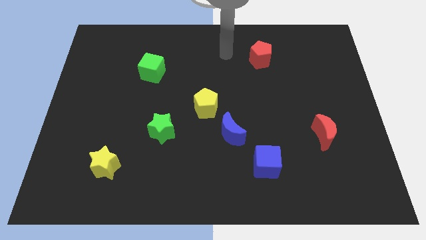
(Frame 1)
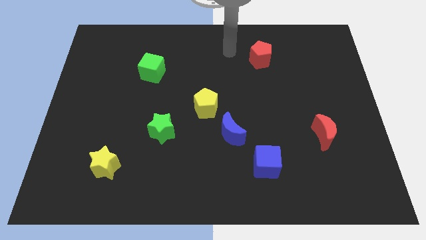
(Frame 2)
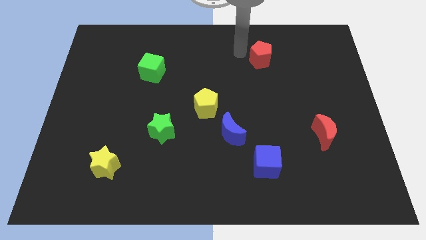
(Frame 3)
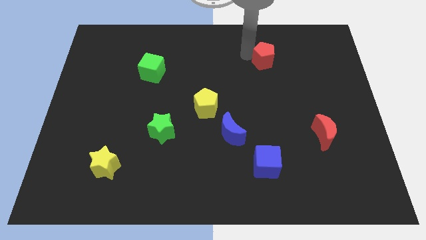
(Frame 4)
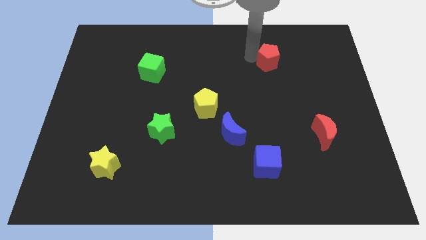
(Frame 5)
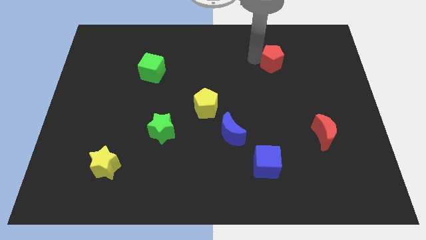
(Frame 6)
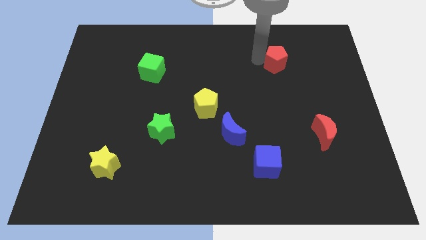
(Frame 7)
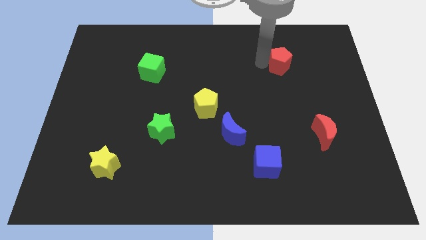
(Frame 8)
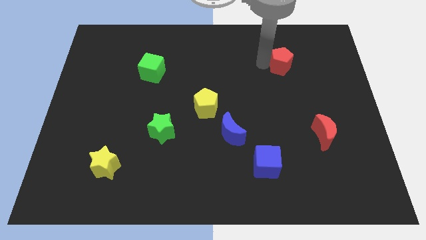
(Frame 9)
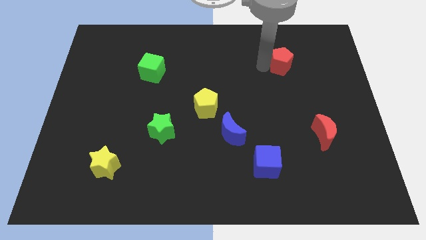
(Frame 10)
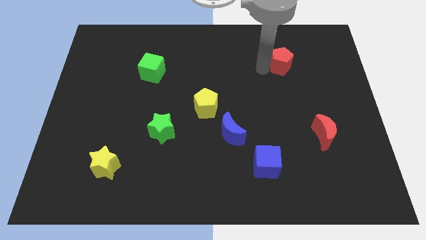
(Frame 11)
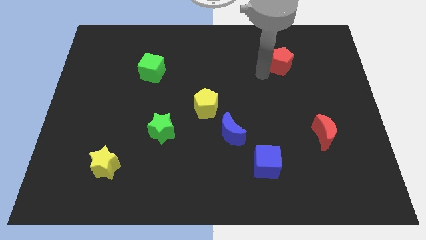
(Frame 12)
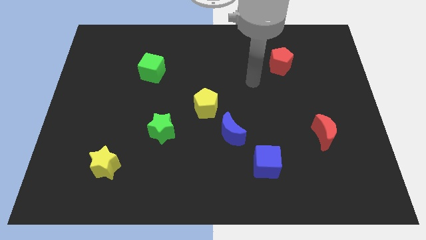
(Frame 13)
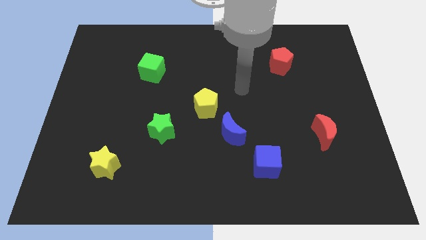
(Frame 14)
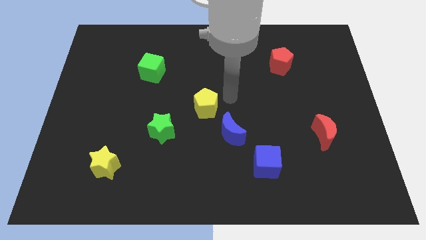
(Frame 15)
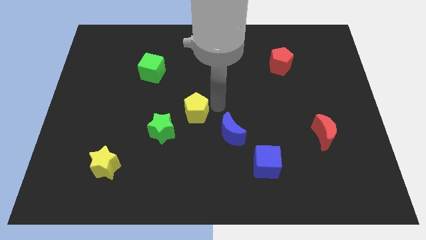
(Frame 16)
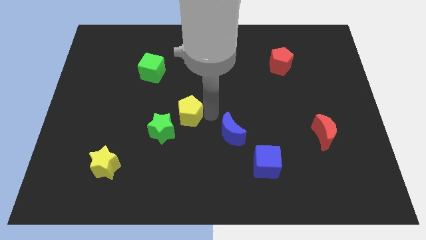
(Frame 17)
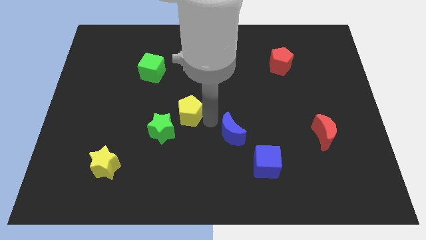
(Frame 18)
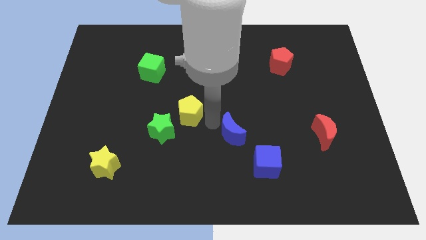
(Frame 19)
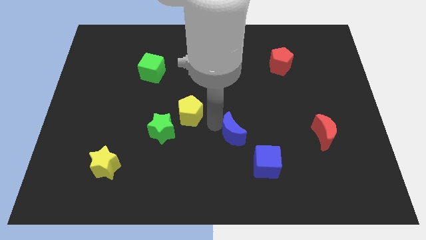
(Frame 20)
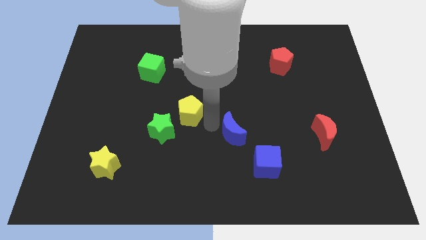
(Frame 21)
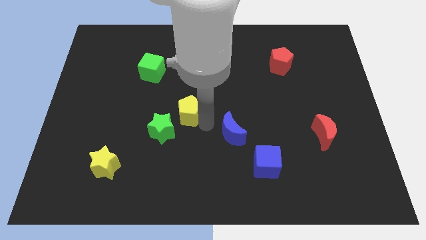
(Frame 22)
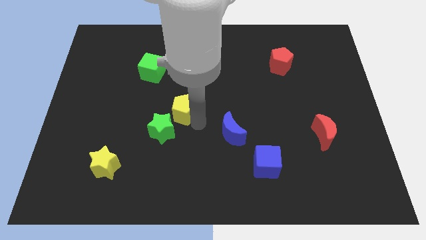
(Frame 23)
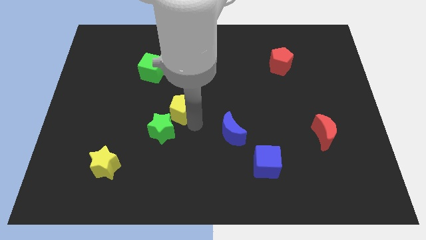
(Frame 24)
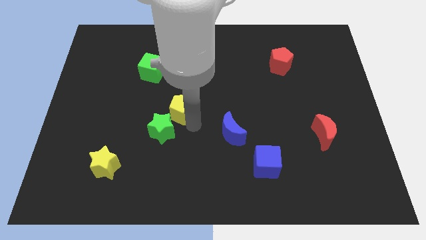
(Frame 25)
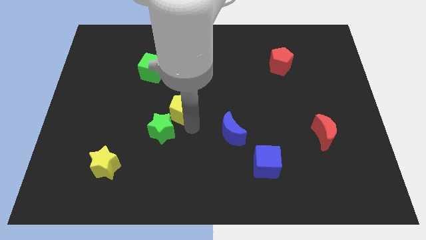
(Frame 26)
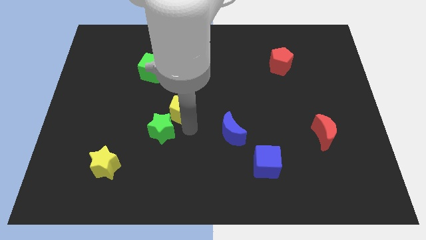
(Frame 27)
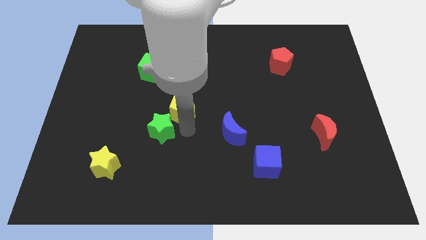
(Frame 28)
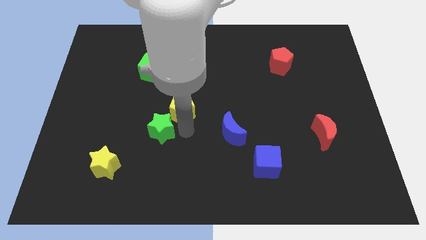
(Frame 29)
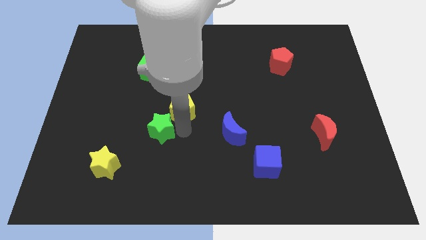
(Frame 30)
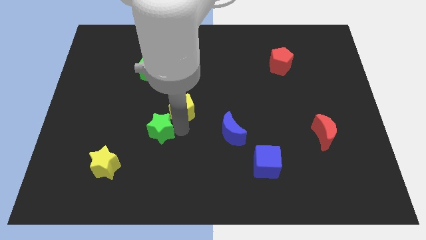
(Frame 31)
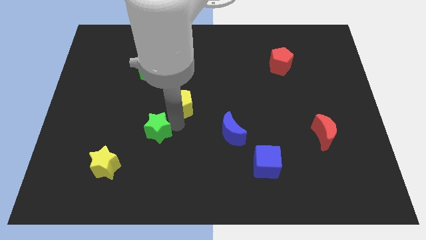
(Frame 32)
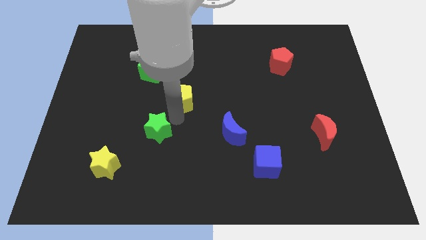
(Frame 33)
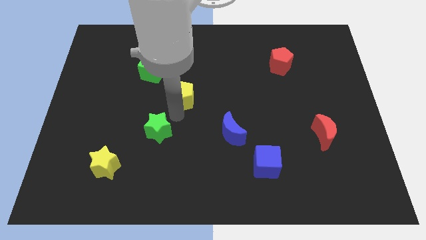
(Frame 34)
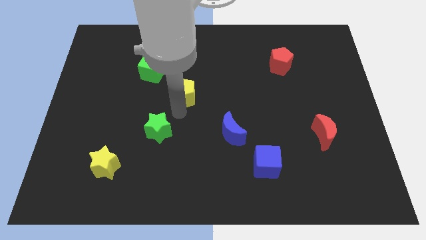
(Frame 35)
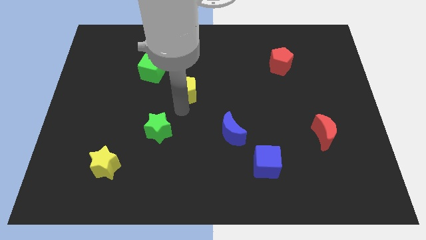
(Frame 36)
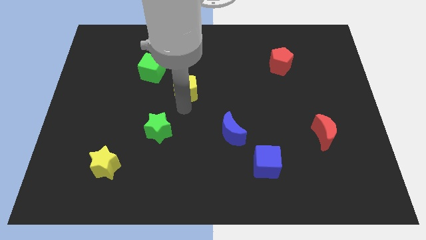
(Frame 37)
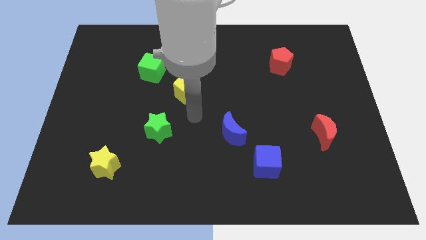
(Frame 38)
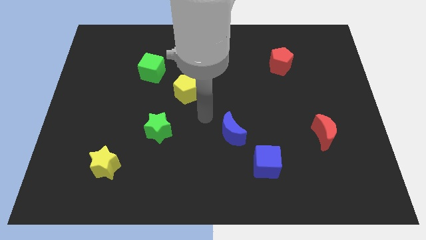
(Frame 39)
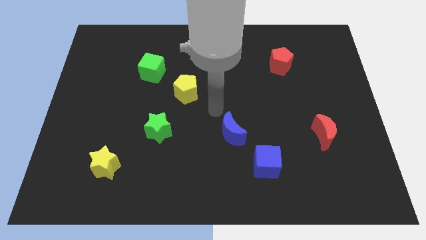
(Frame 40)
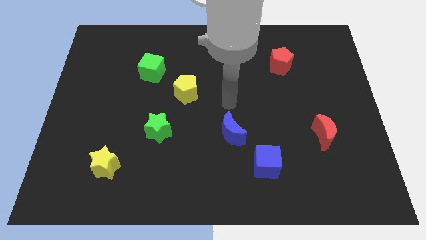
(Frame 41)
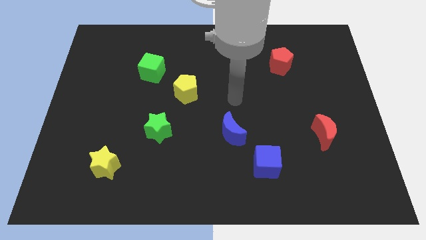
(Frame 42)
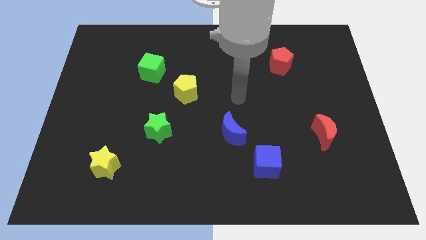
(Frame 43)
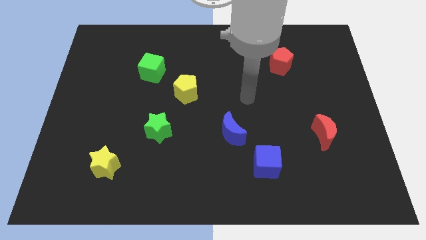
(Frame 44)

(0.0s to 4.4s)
separate the yellow pentagon and green star by placing the yellow pentagon towards the bottom right of green cube

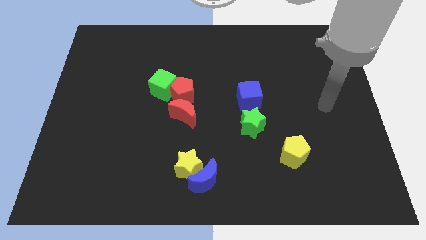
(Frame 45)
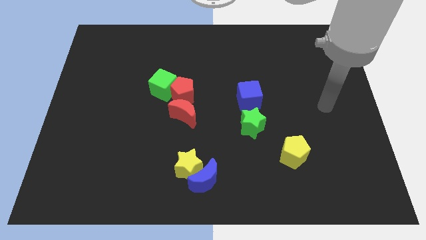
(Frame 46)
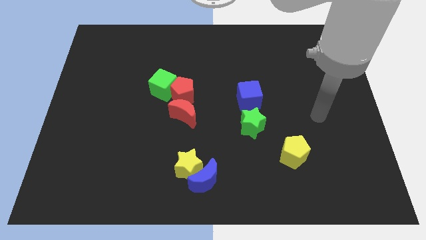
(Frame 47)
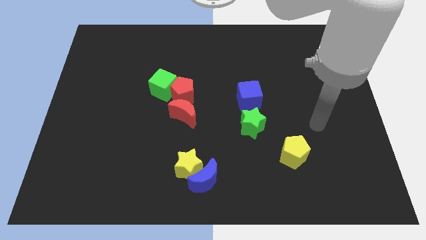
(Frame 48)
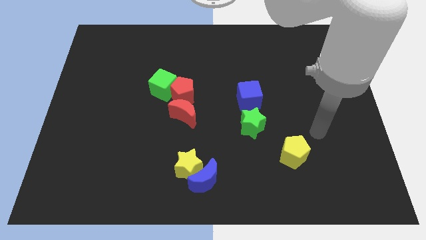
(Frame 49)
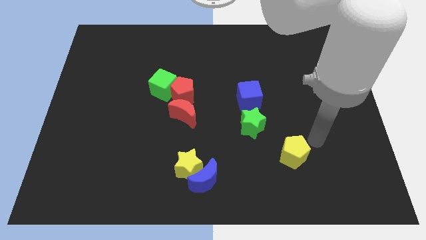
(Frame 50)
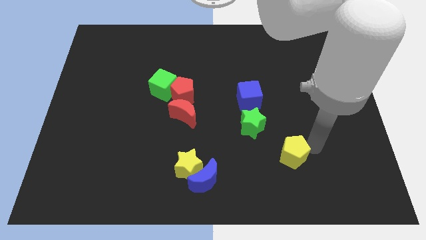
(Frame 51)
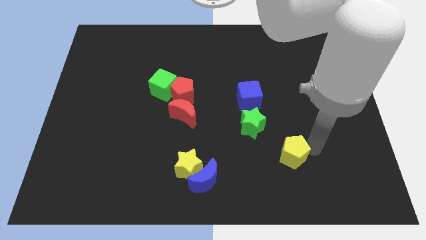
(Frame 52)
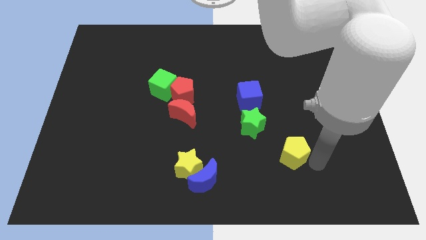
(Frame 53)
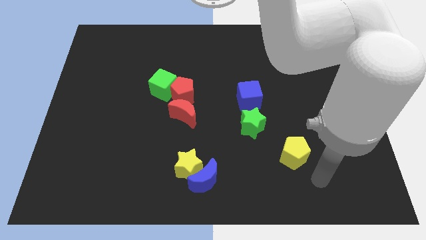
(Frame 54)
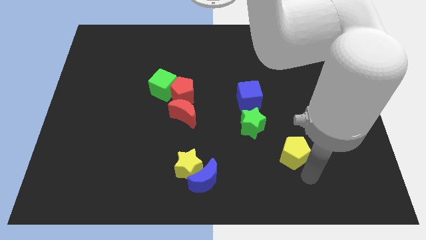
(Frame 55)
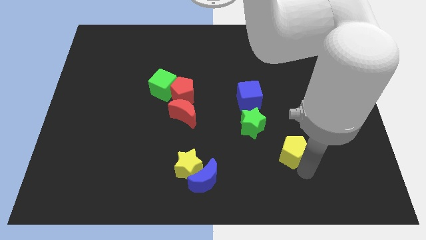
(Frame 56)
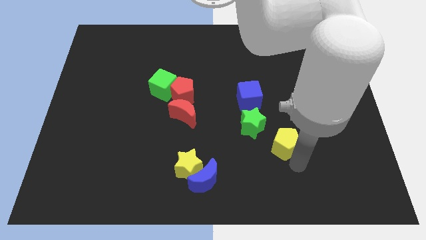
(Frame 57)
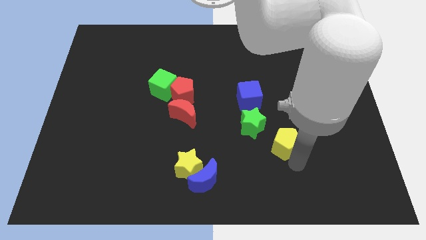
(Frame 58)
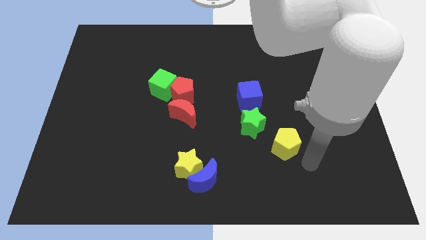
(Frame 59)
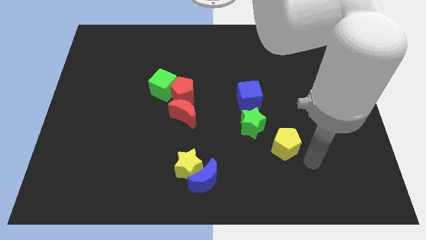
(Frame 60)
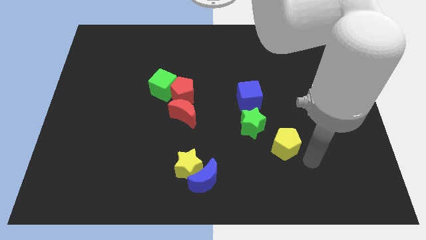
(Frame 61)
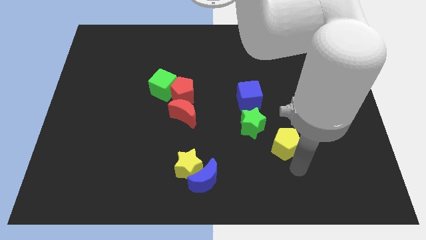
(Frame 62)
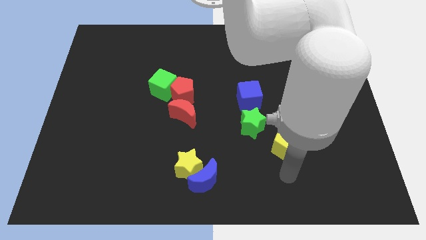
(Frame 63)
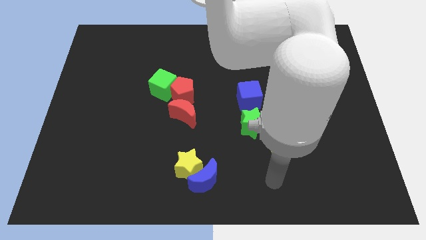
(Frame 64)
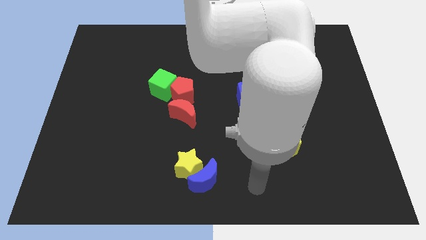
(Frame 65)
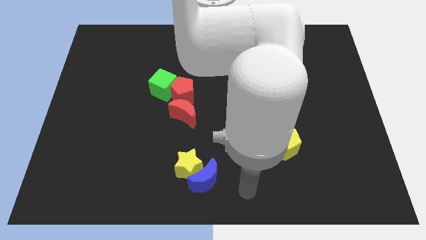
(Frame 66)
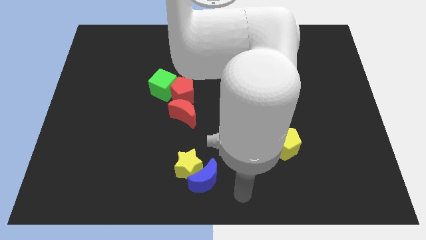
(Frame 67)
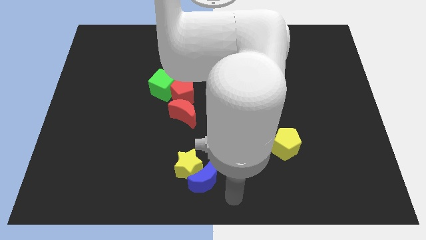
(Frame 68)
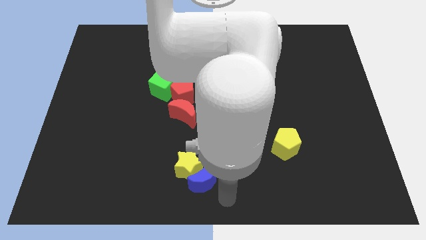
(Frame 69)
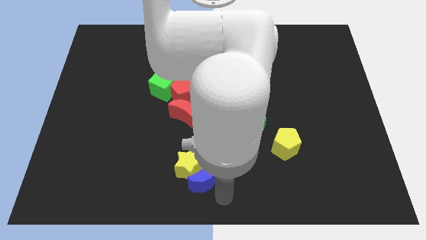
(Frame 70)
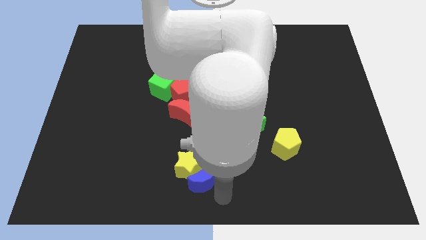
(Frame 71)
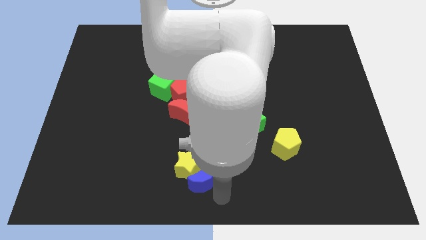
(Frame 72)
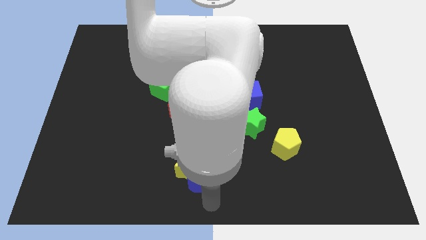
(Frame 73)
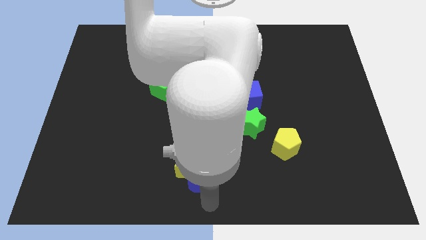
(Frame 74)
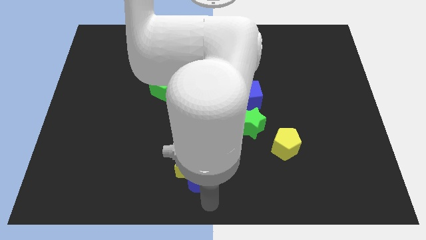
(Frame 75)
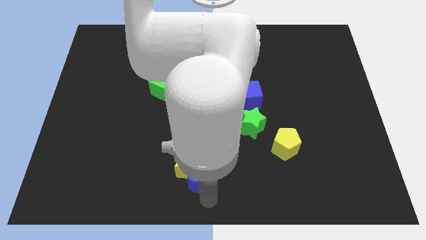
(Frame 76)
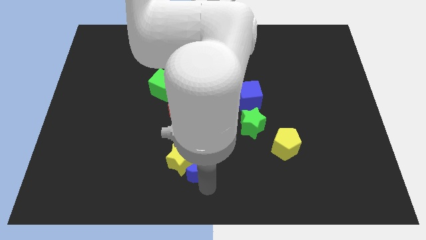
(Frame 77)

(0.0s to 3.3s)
move your arm at the bottom of the blue moon

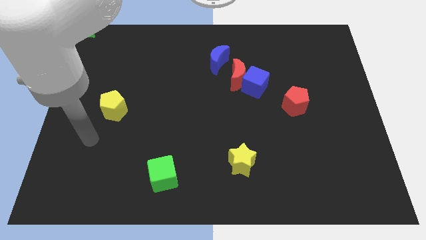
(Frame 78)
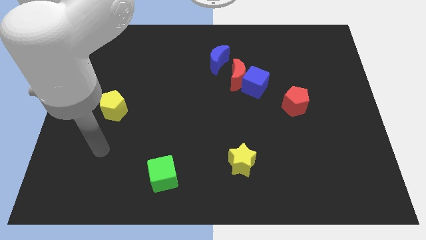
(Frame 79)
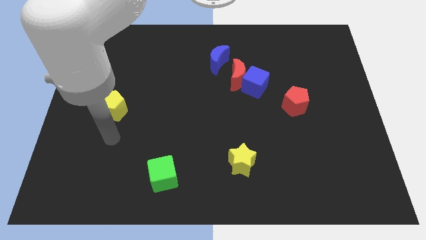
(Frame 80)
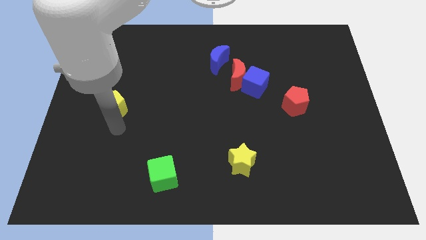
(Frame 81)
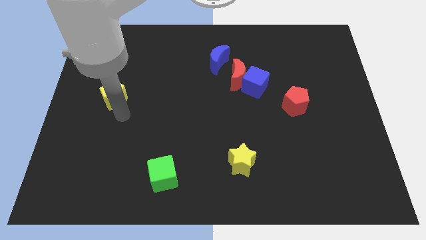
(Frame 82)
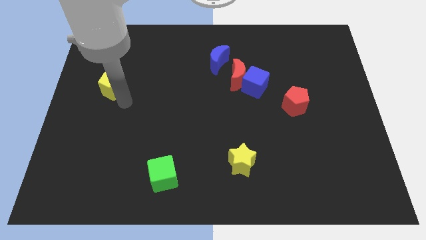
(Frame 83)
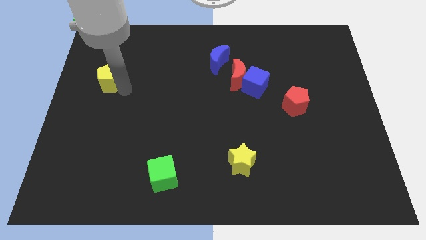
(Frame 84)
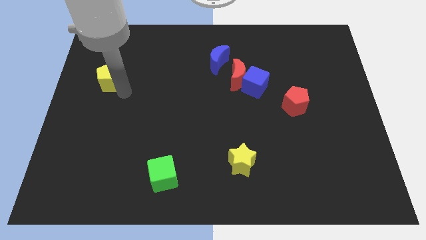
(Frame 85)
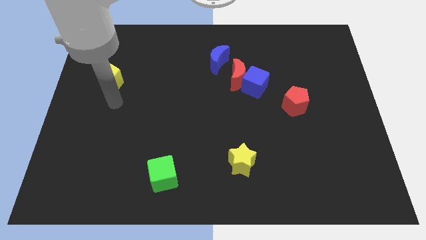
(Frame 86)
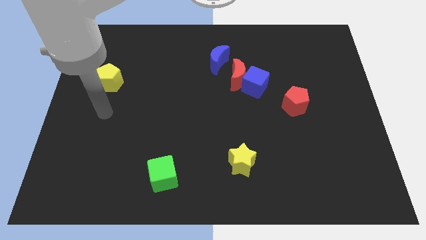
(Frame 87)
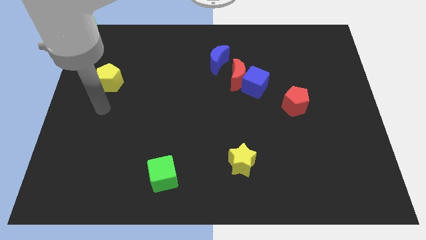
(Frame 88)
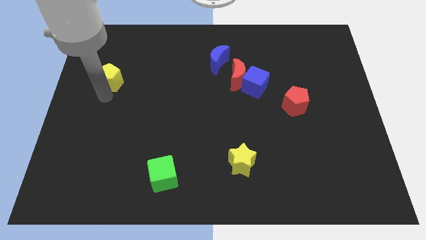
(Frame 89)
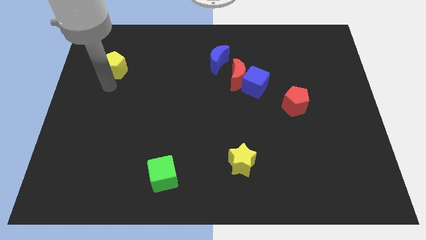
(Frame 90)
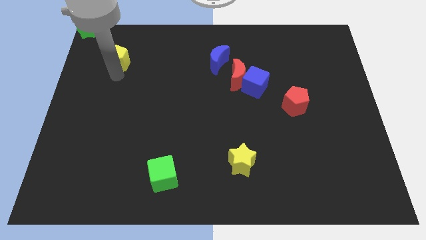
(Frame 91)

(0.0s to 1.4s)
push the yellow pentagon upwards
